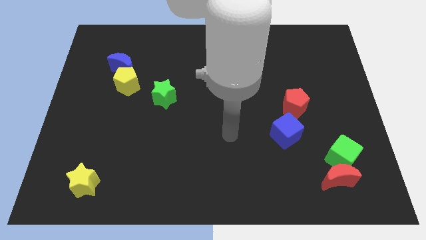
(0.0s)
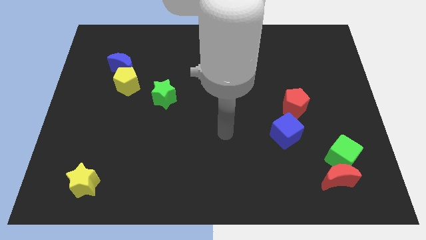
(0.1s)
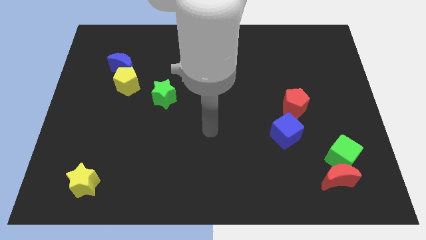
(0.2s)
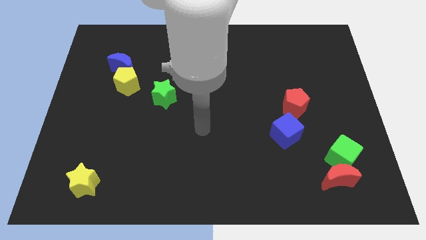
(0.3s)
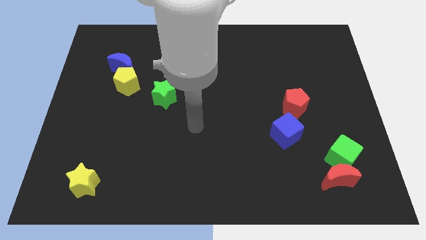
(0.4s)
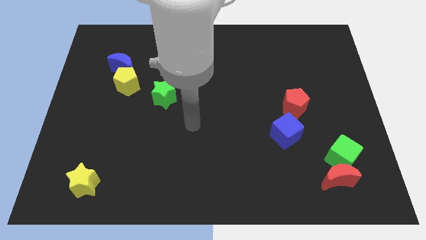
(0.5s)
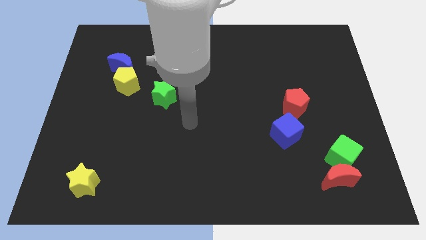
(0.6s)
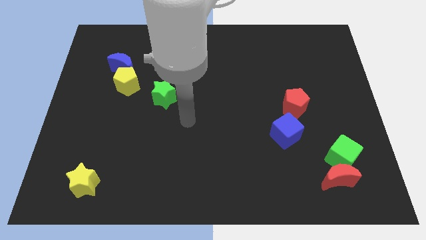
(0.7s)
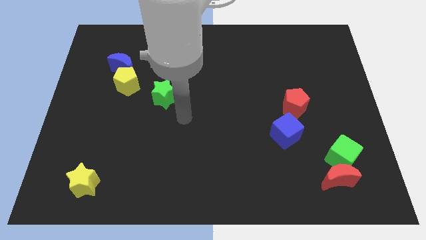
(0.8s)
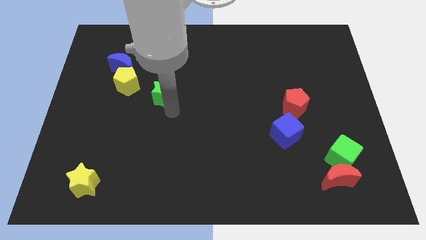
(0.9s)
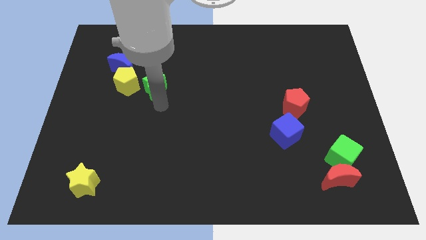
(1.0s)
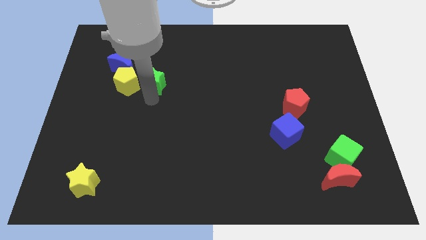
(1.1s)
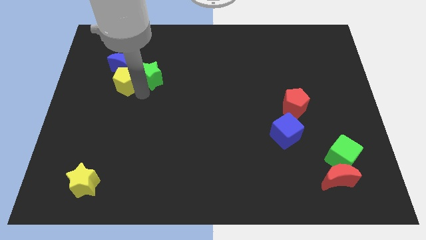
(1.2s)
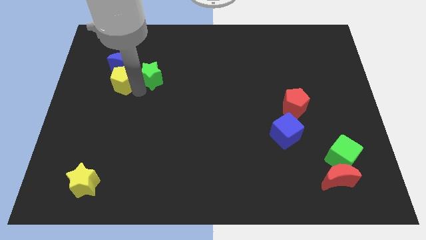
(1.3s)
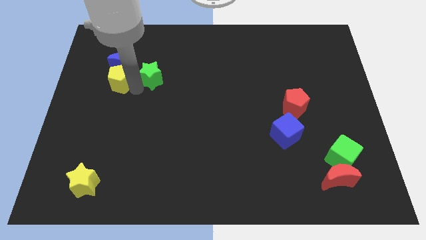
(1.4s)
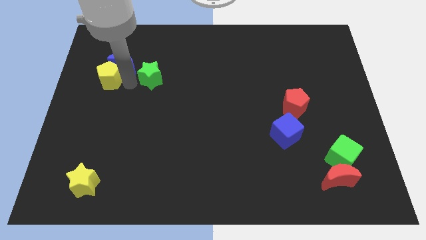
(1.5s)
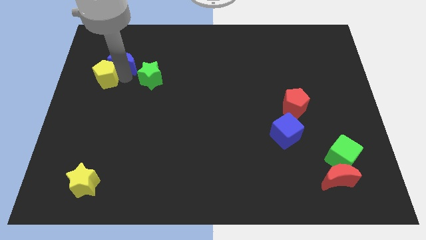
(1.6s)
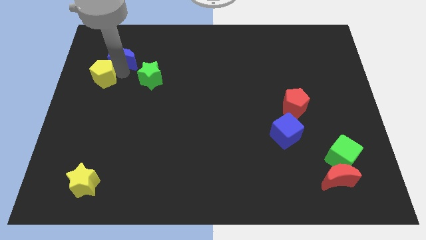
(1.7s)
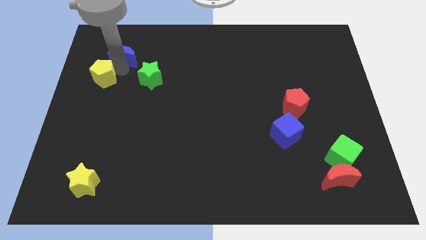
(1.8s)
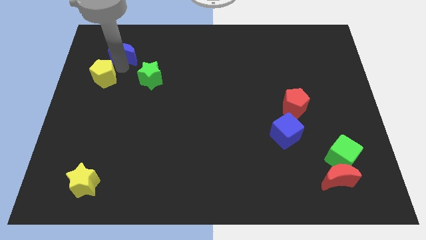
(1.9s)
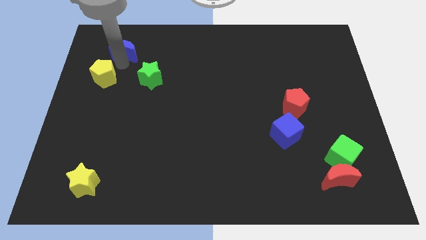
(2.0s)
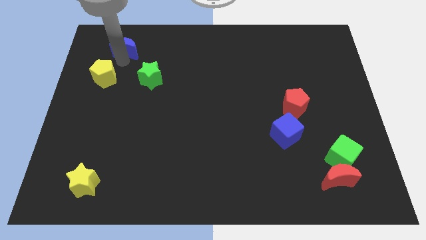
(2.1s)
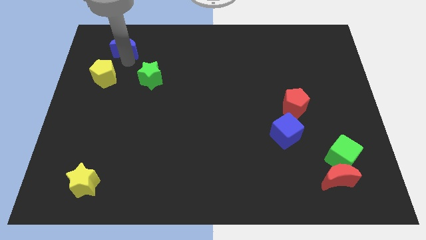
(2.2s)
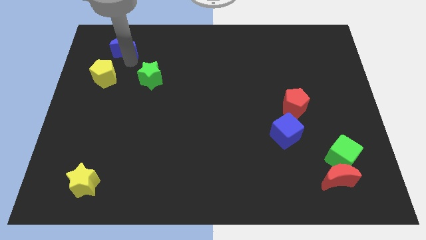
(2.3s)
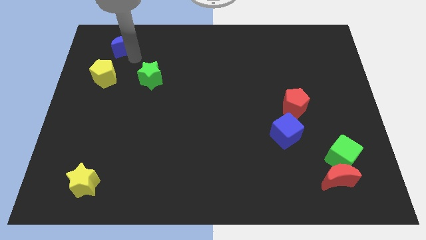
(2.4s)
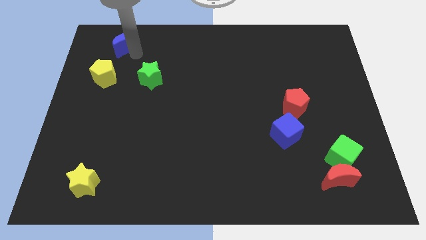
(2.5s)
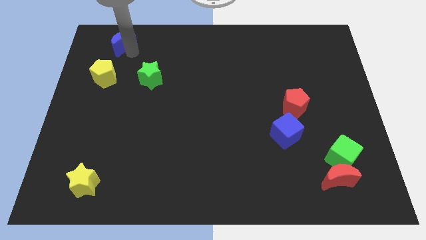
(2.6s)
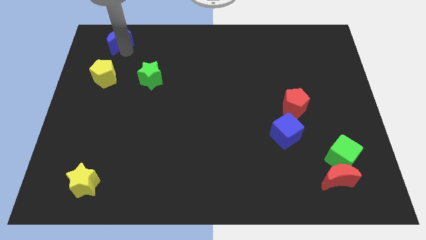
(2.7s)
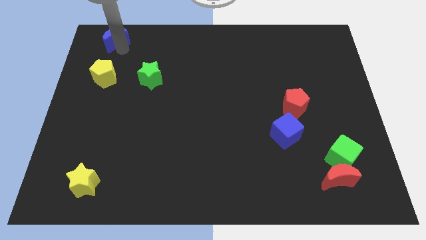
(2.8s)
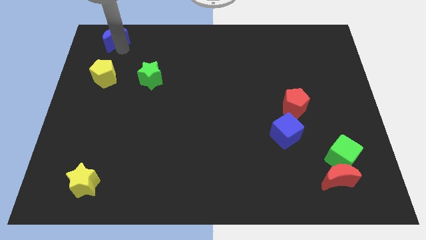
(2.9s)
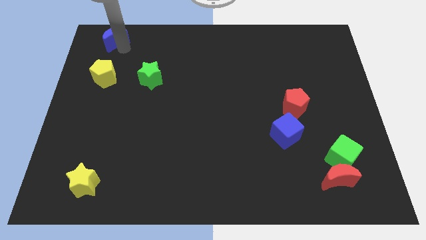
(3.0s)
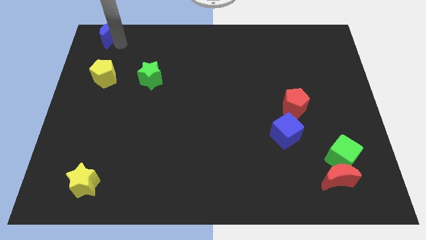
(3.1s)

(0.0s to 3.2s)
separate the blue crescent between the two blocks

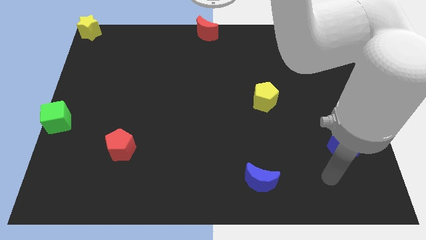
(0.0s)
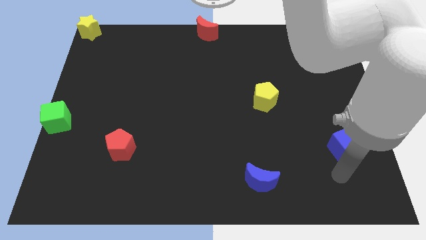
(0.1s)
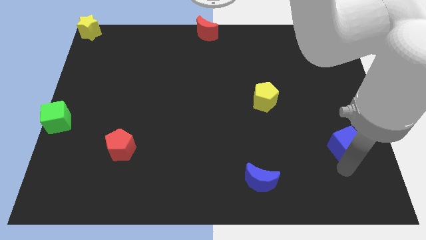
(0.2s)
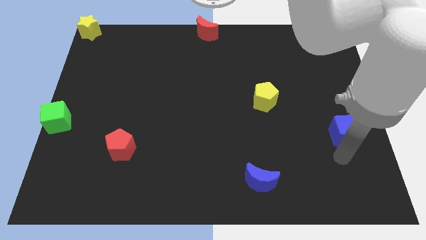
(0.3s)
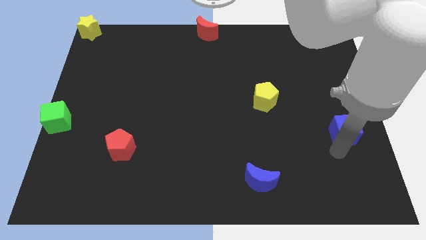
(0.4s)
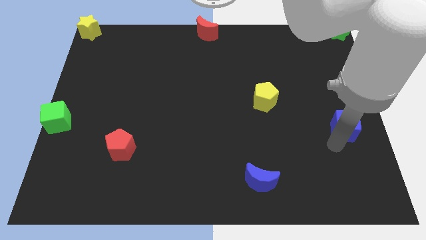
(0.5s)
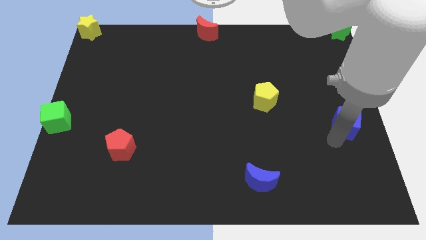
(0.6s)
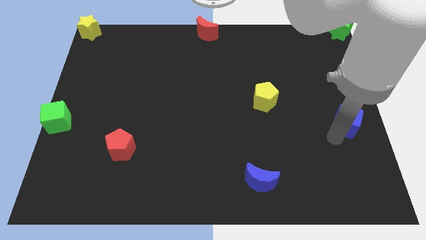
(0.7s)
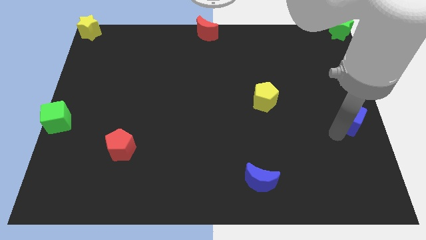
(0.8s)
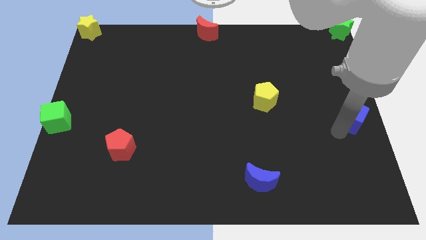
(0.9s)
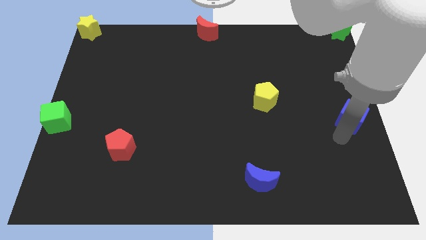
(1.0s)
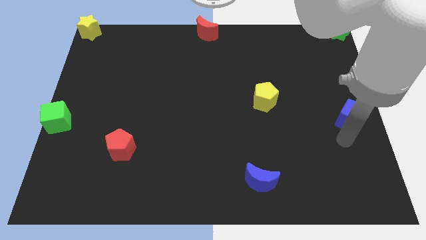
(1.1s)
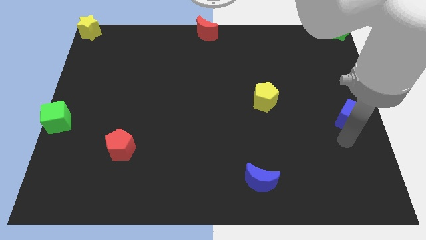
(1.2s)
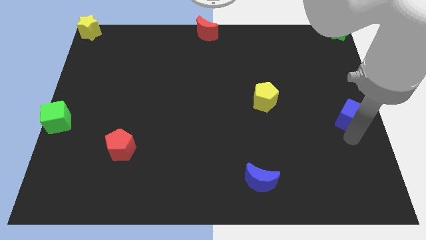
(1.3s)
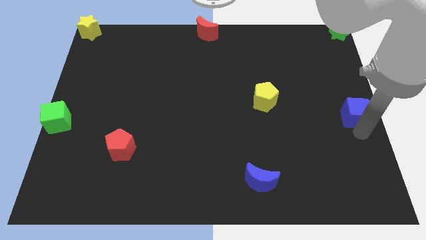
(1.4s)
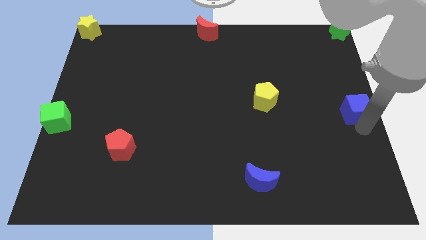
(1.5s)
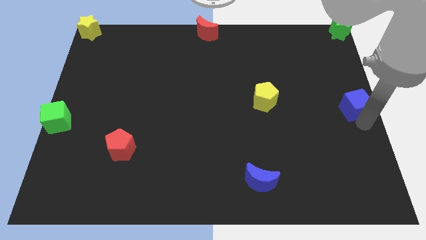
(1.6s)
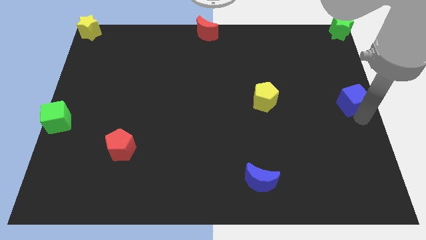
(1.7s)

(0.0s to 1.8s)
push the blue cube to the right center of the board

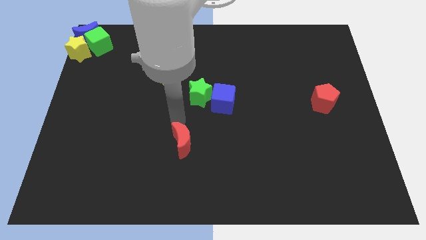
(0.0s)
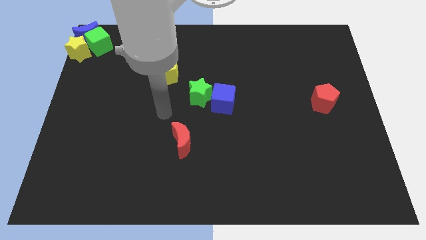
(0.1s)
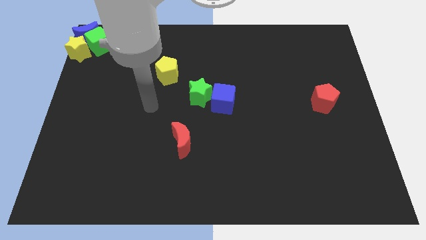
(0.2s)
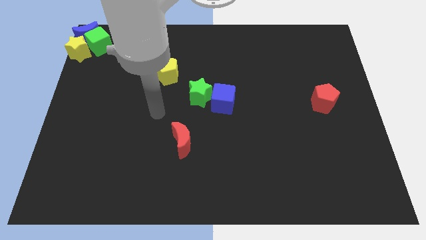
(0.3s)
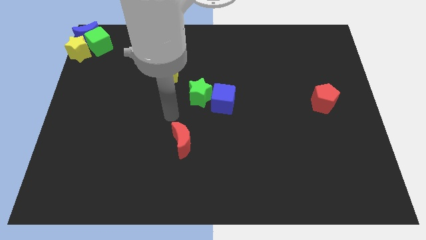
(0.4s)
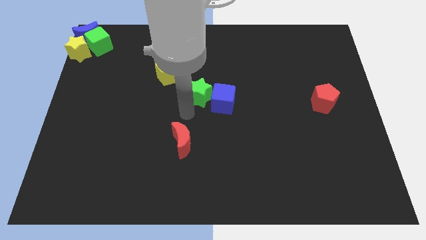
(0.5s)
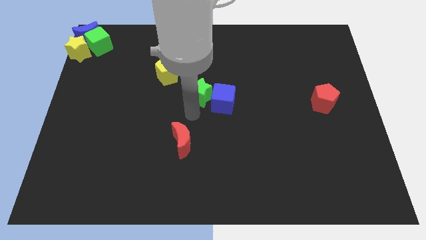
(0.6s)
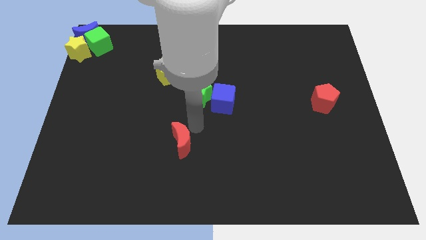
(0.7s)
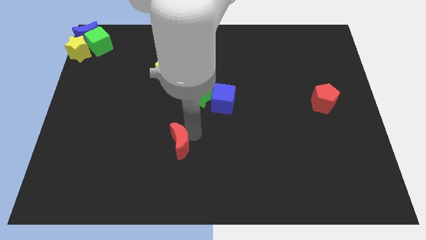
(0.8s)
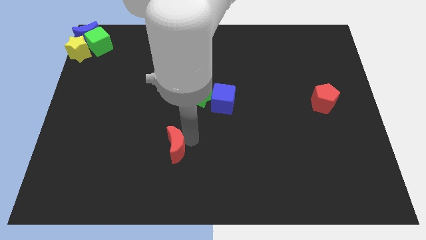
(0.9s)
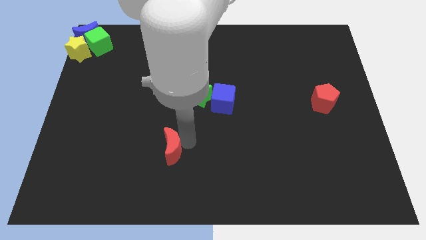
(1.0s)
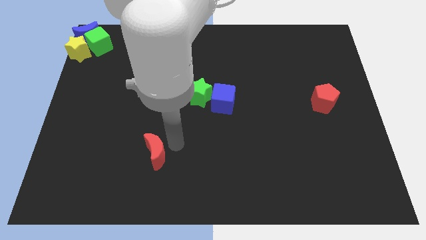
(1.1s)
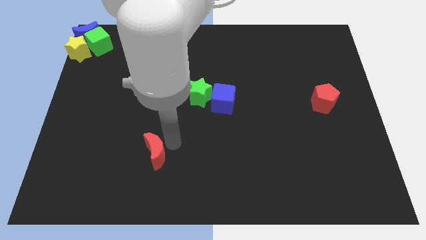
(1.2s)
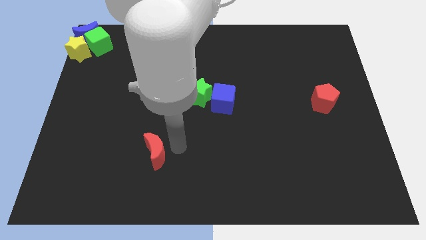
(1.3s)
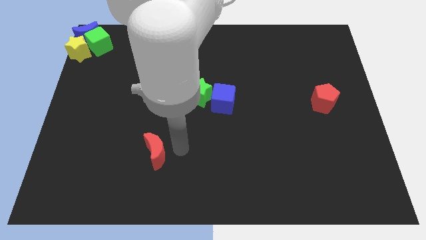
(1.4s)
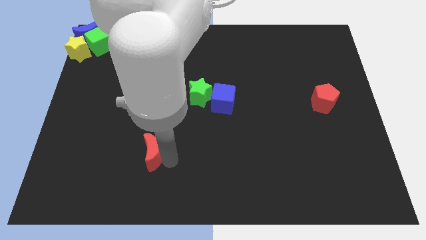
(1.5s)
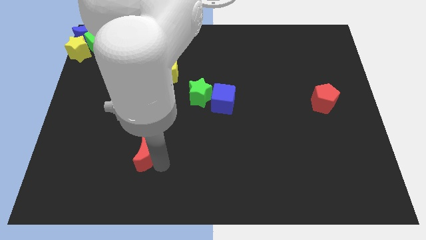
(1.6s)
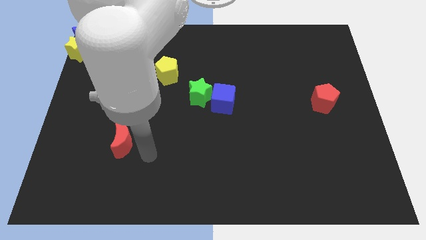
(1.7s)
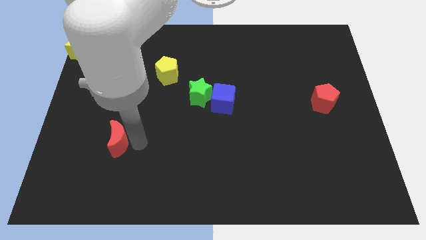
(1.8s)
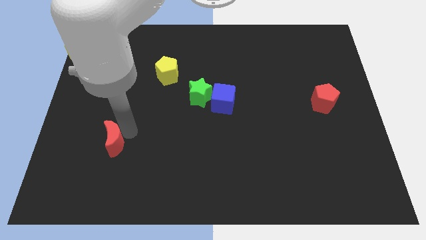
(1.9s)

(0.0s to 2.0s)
push the red moon towards left side

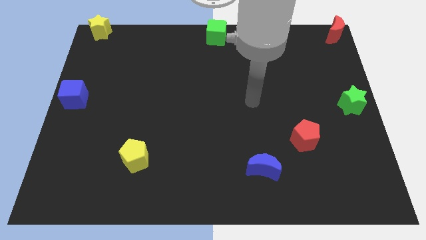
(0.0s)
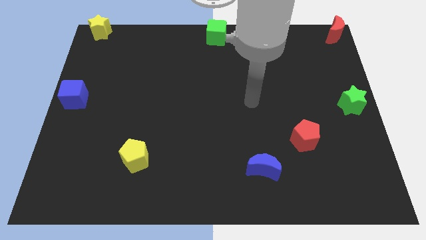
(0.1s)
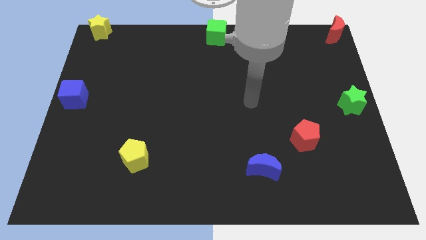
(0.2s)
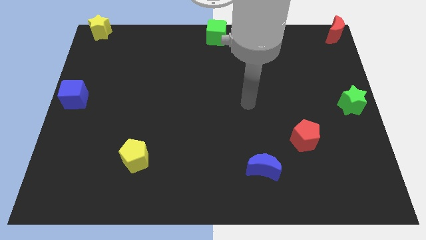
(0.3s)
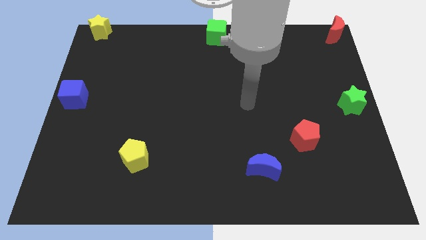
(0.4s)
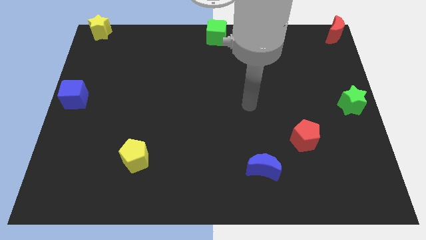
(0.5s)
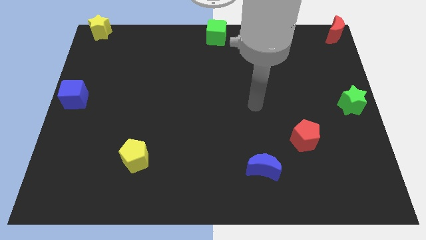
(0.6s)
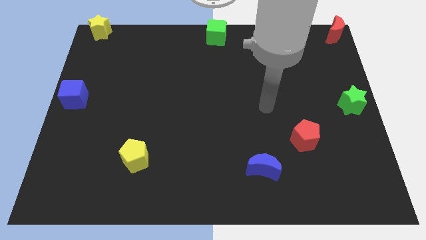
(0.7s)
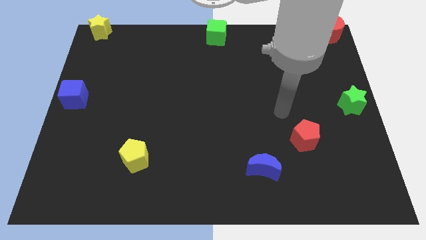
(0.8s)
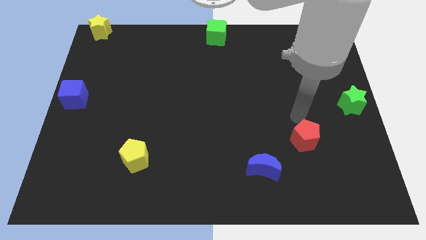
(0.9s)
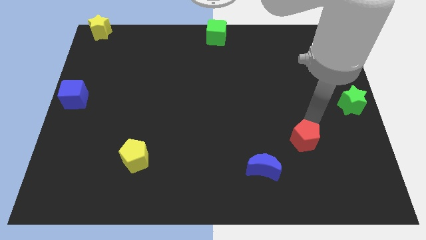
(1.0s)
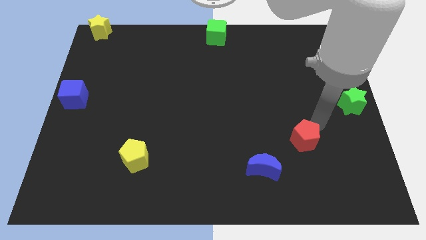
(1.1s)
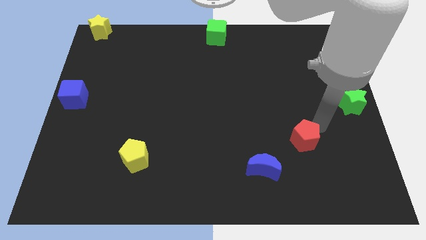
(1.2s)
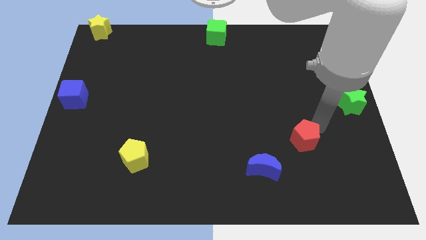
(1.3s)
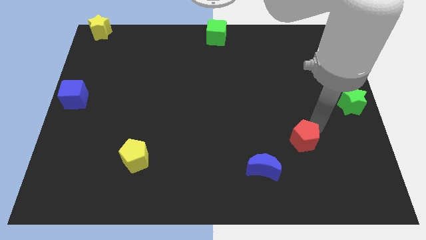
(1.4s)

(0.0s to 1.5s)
point your arm towards the top right side of the red pentagon

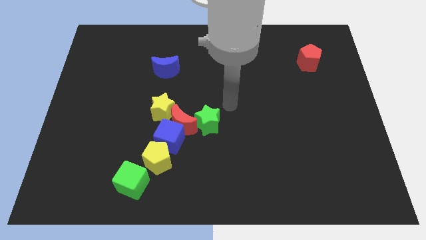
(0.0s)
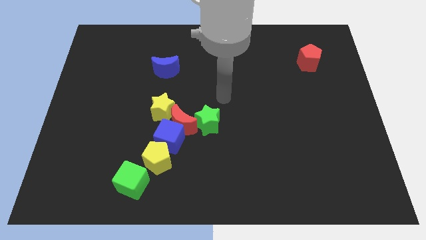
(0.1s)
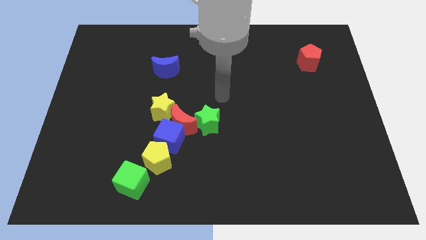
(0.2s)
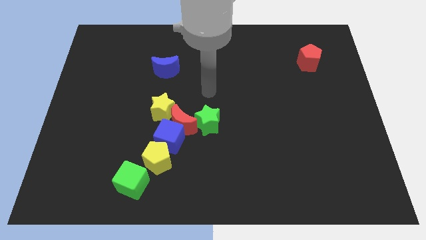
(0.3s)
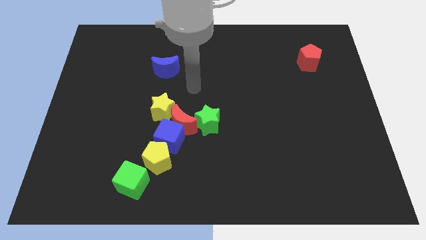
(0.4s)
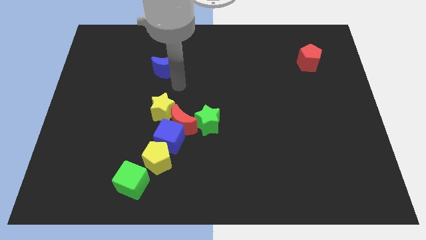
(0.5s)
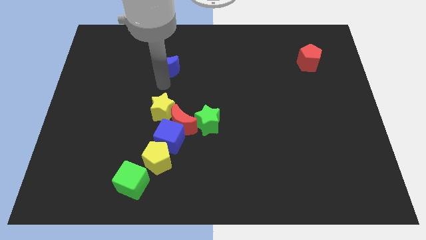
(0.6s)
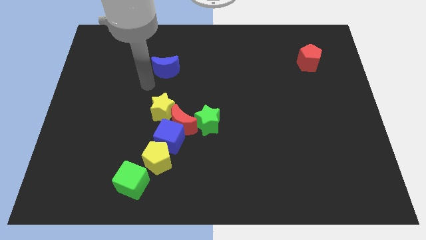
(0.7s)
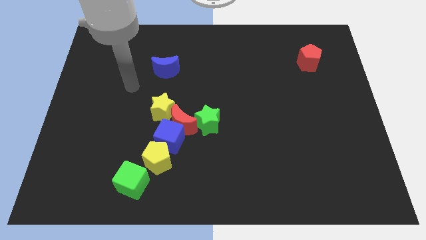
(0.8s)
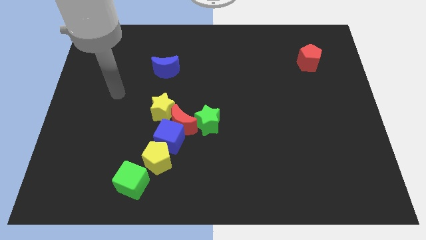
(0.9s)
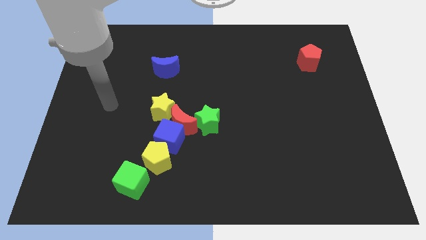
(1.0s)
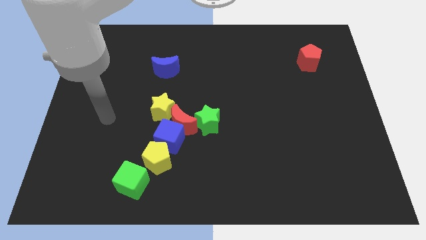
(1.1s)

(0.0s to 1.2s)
slide your arm diagonally top left to the yellow pentagon
